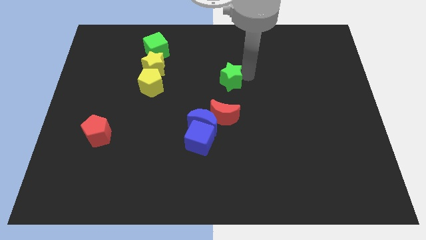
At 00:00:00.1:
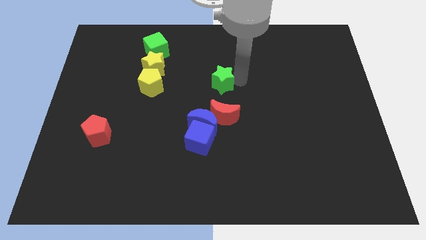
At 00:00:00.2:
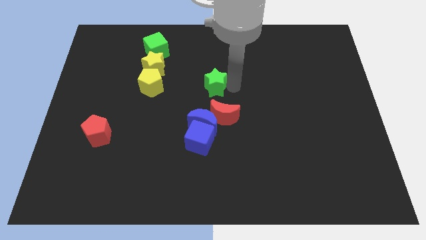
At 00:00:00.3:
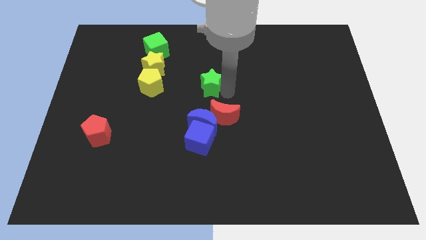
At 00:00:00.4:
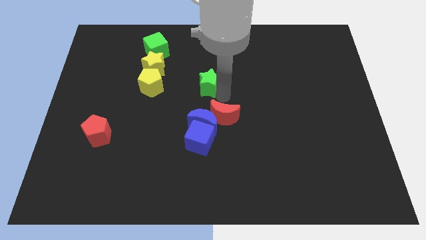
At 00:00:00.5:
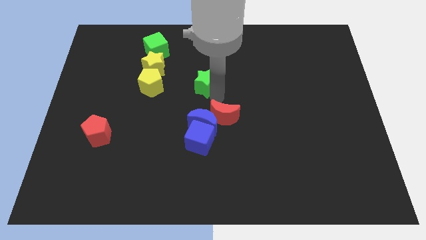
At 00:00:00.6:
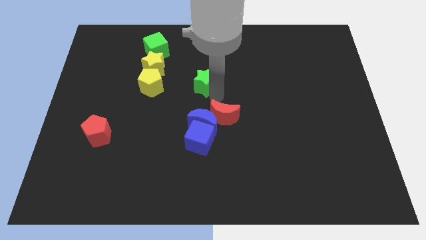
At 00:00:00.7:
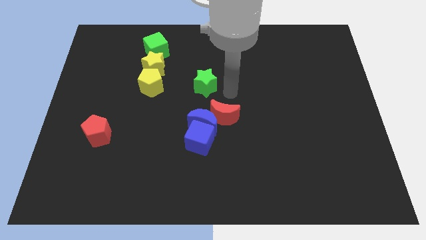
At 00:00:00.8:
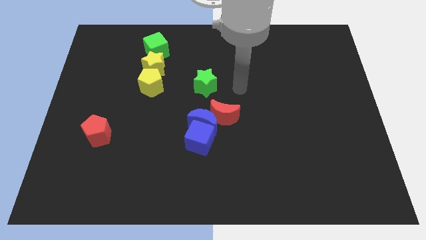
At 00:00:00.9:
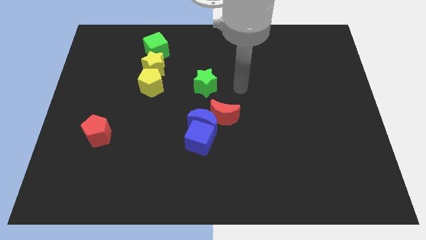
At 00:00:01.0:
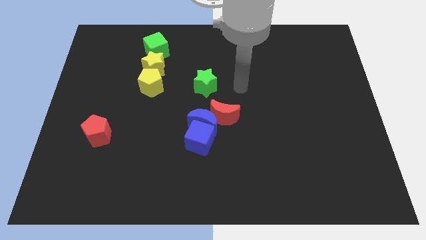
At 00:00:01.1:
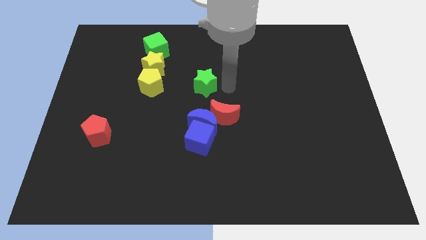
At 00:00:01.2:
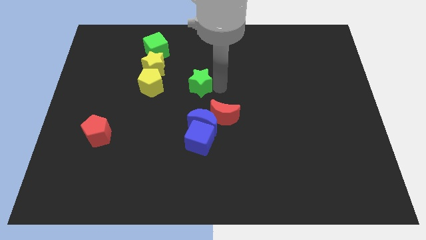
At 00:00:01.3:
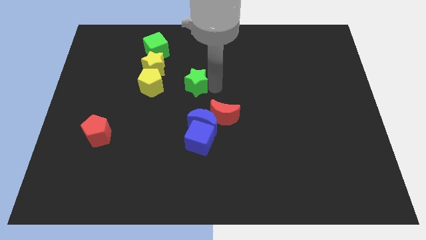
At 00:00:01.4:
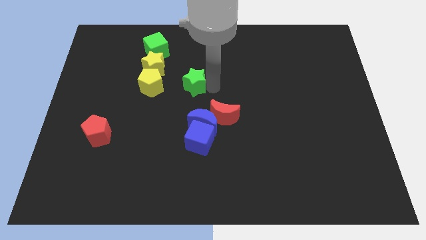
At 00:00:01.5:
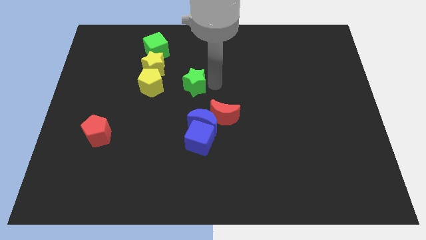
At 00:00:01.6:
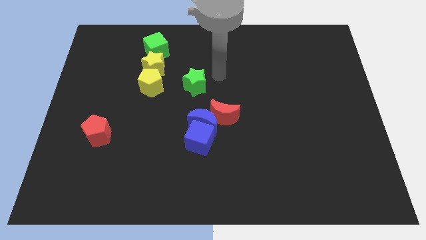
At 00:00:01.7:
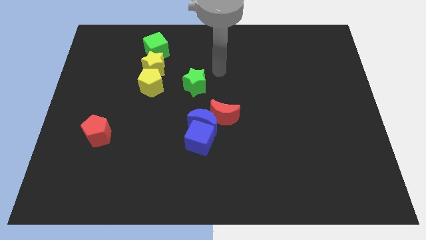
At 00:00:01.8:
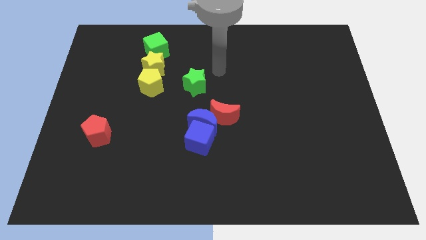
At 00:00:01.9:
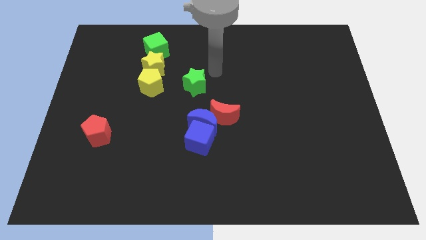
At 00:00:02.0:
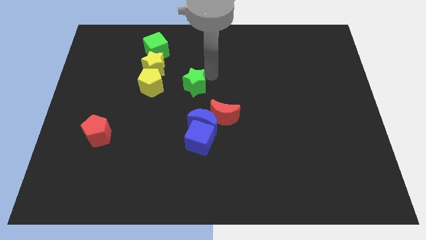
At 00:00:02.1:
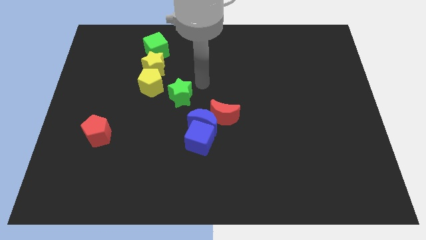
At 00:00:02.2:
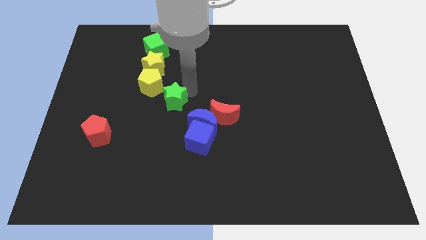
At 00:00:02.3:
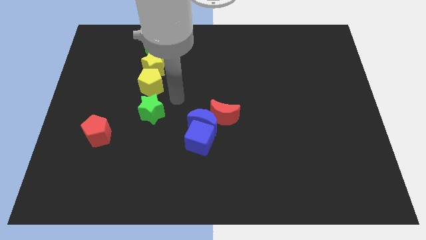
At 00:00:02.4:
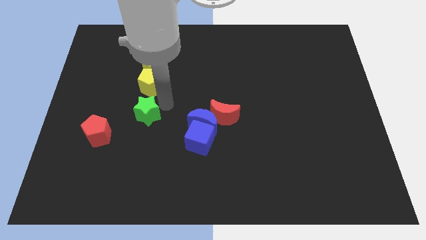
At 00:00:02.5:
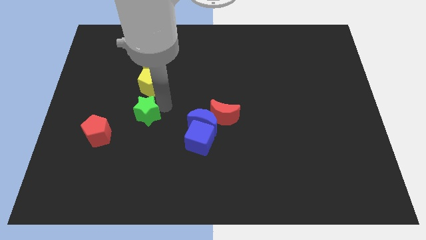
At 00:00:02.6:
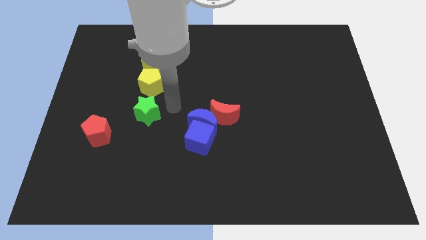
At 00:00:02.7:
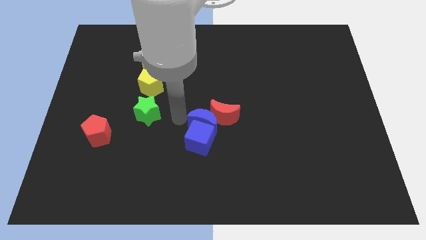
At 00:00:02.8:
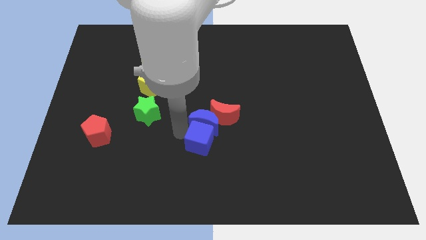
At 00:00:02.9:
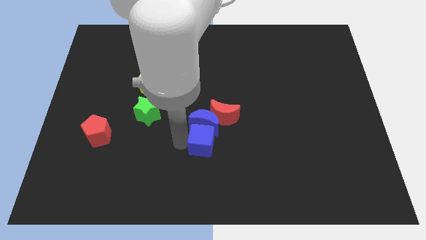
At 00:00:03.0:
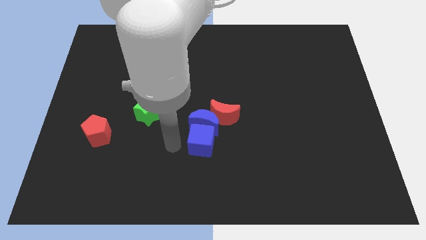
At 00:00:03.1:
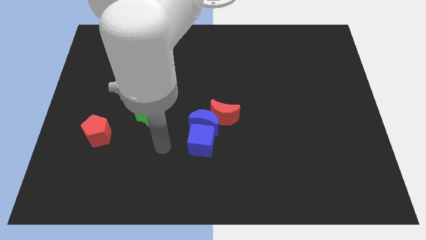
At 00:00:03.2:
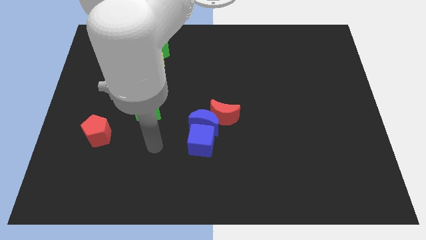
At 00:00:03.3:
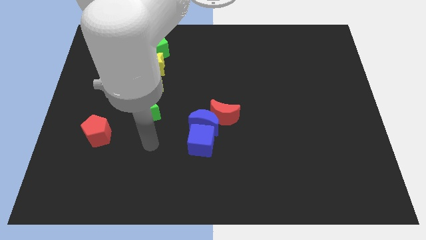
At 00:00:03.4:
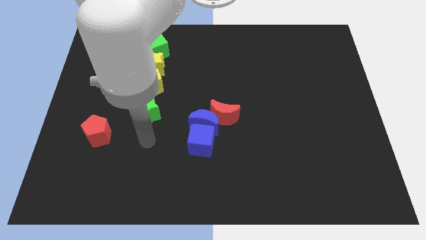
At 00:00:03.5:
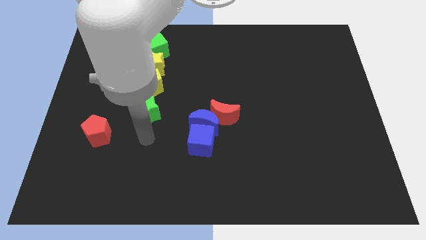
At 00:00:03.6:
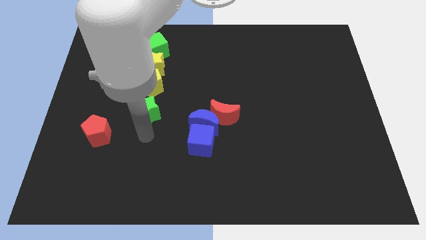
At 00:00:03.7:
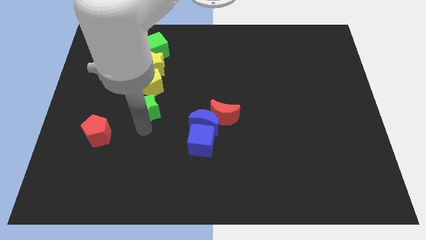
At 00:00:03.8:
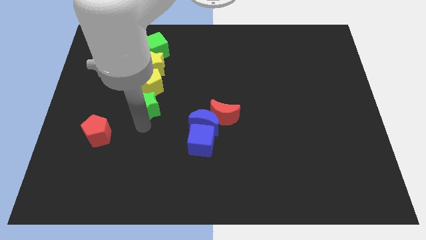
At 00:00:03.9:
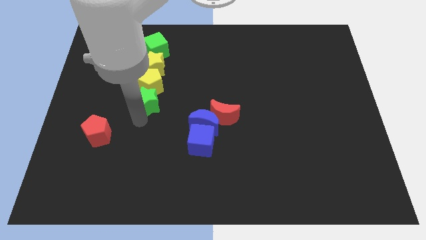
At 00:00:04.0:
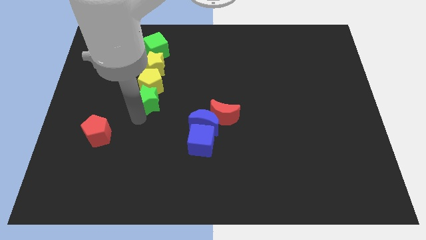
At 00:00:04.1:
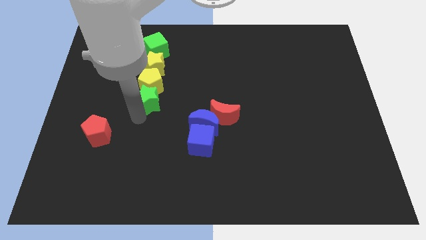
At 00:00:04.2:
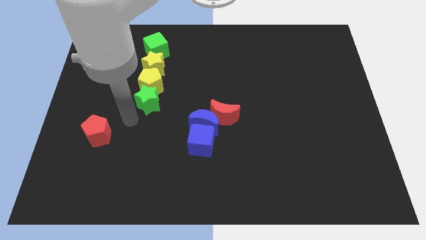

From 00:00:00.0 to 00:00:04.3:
place the green star below the yellow pentagon

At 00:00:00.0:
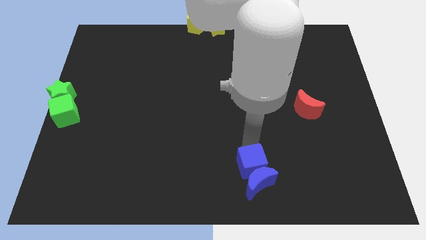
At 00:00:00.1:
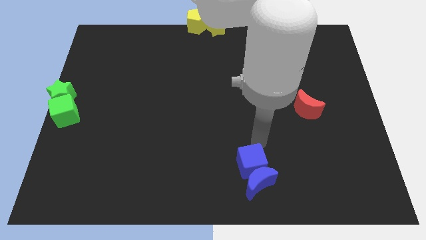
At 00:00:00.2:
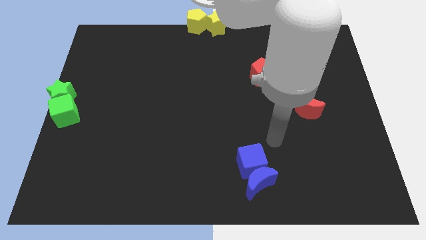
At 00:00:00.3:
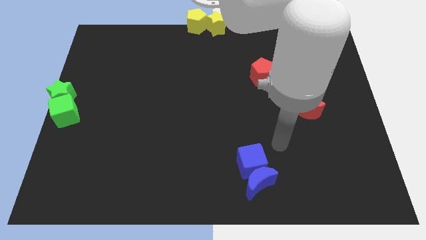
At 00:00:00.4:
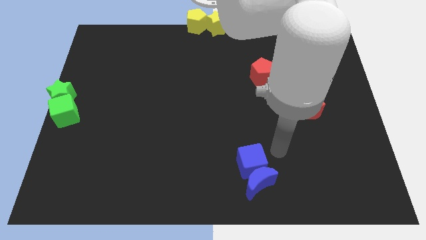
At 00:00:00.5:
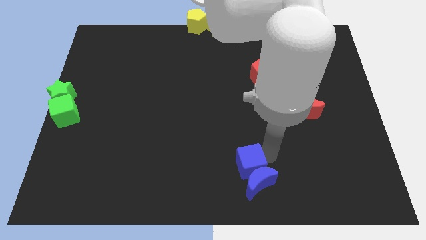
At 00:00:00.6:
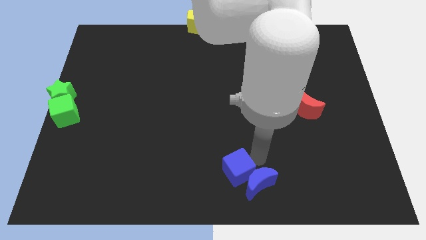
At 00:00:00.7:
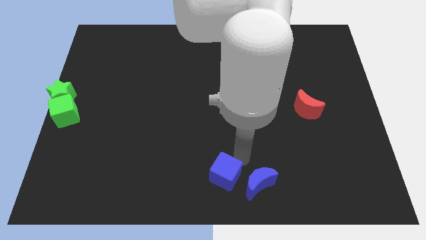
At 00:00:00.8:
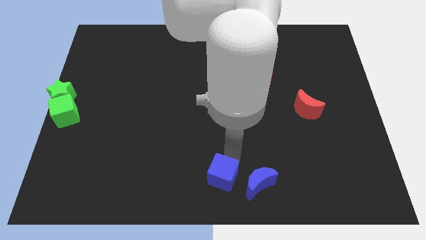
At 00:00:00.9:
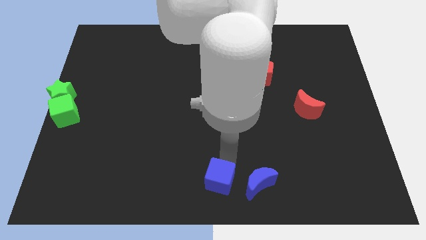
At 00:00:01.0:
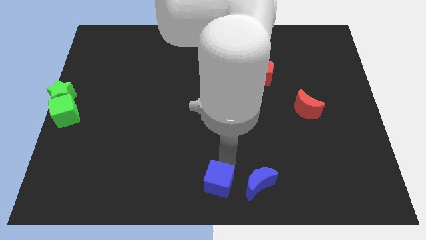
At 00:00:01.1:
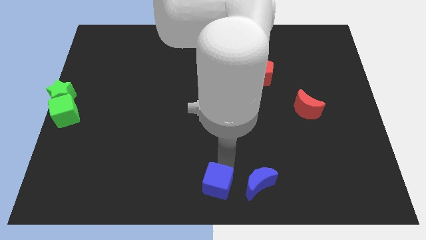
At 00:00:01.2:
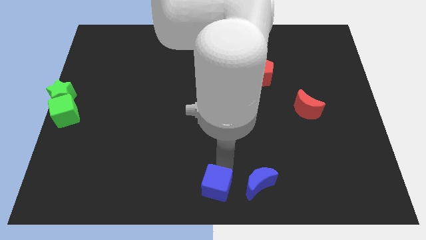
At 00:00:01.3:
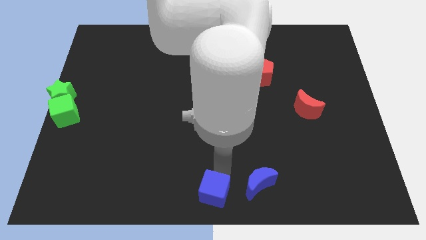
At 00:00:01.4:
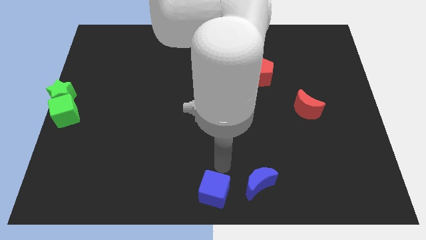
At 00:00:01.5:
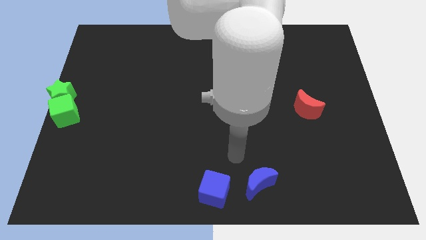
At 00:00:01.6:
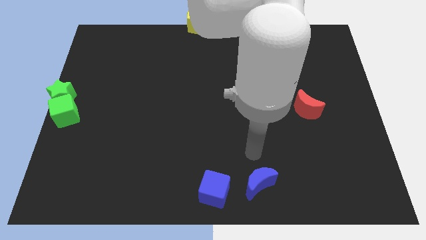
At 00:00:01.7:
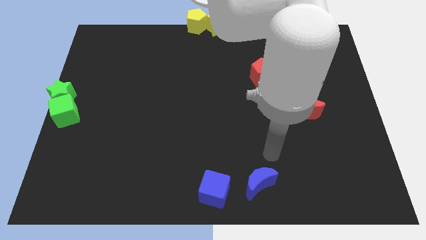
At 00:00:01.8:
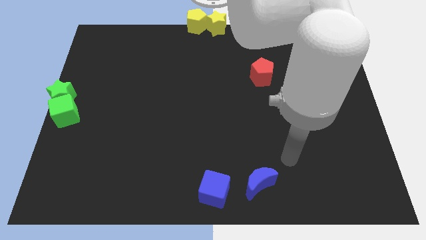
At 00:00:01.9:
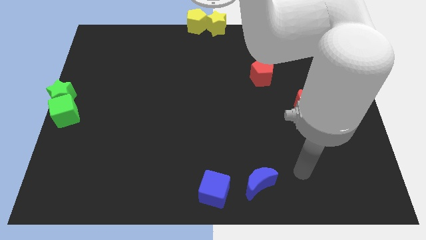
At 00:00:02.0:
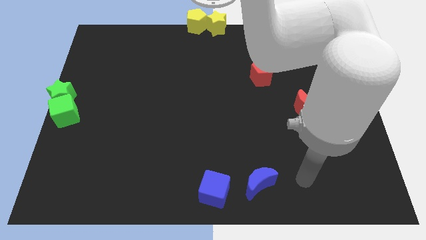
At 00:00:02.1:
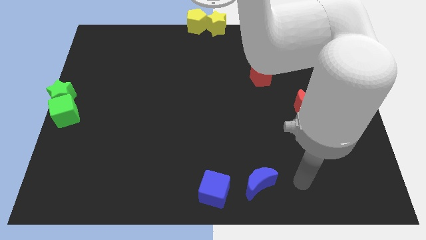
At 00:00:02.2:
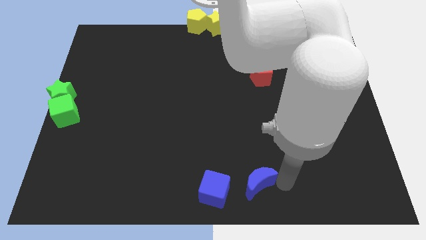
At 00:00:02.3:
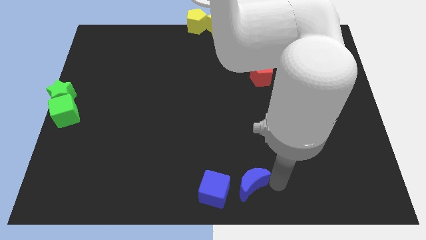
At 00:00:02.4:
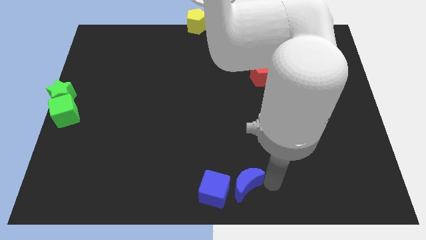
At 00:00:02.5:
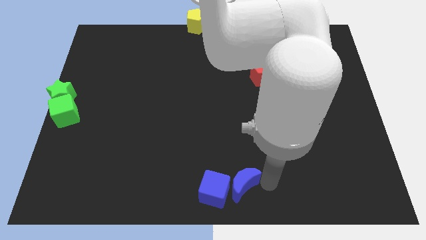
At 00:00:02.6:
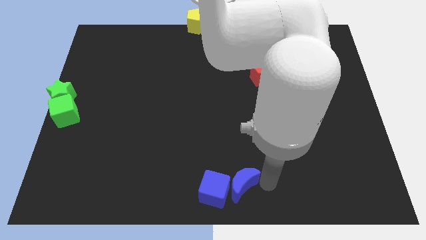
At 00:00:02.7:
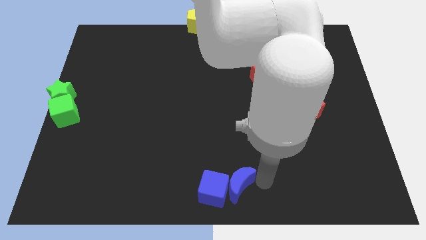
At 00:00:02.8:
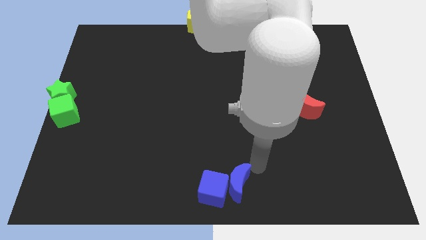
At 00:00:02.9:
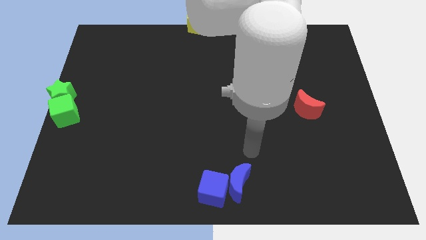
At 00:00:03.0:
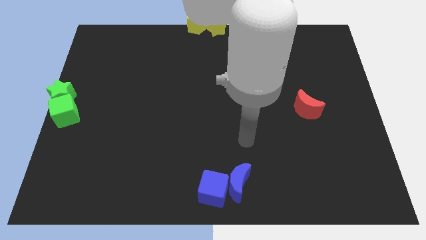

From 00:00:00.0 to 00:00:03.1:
move the blue moon to the right of the blue cube

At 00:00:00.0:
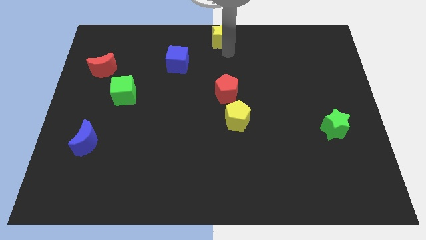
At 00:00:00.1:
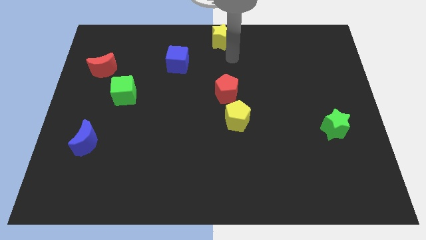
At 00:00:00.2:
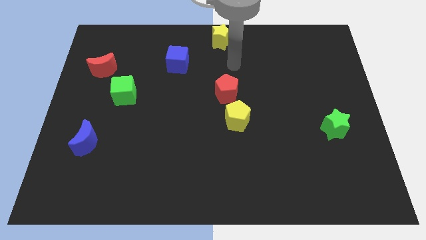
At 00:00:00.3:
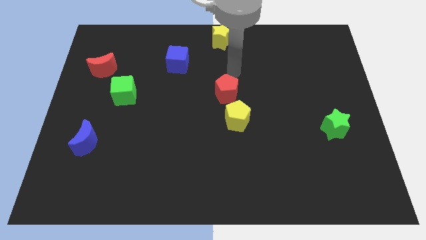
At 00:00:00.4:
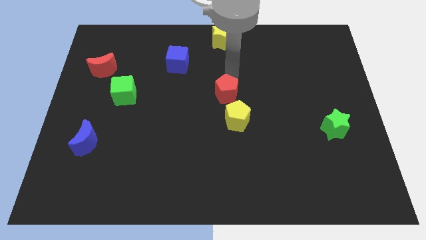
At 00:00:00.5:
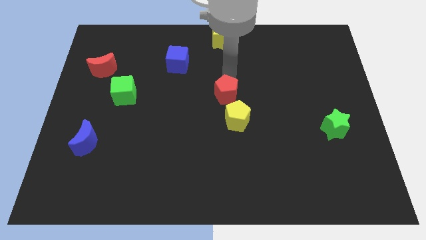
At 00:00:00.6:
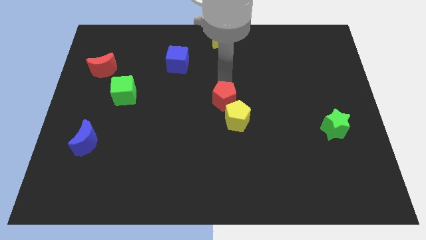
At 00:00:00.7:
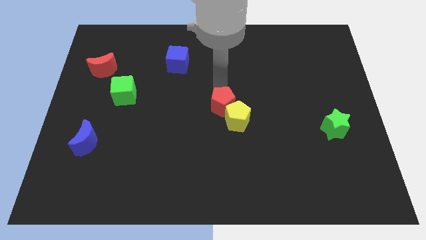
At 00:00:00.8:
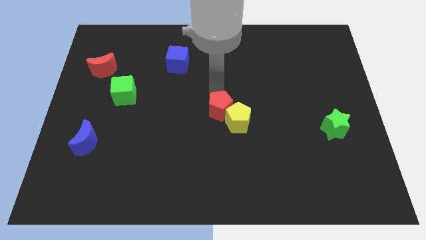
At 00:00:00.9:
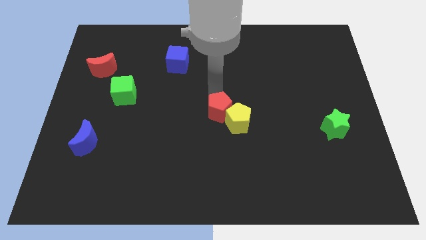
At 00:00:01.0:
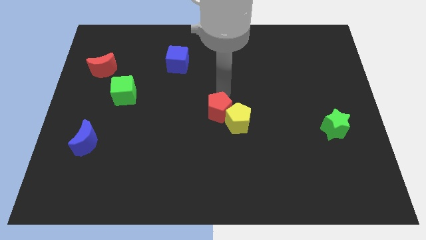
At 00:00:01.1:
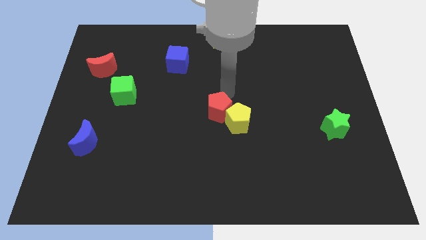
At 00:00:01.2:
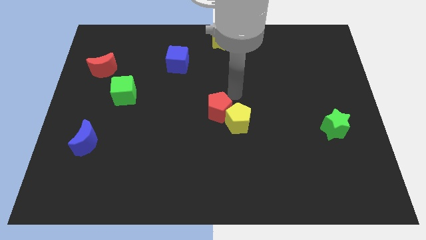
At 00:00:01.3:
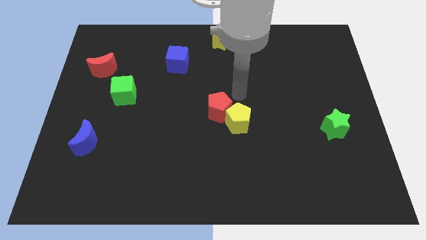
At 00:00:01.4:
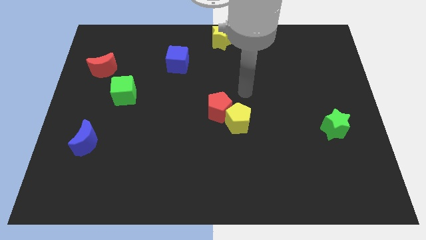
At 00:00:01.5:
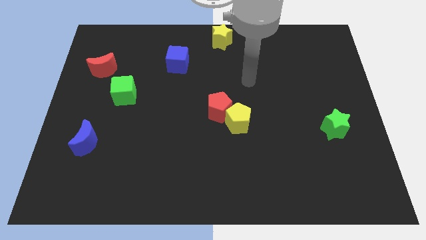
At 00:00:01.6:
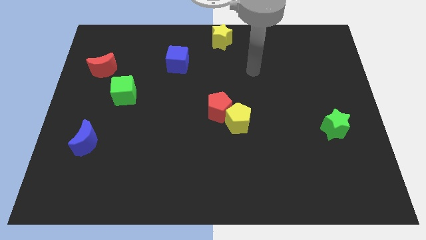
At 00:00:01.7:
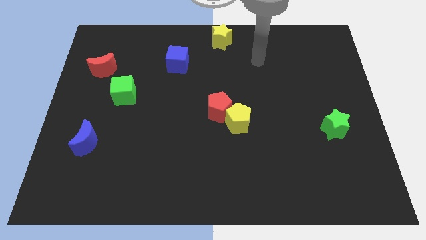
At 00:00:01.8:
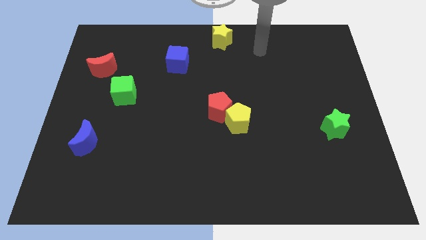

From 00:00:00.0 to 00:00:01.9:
move the red pentagon towards the yellow pentagon
